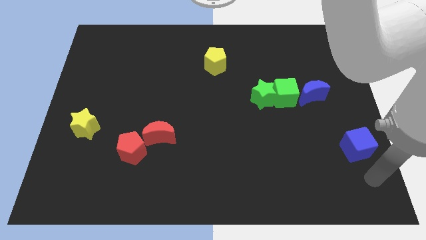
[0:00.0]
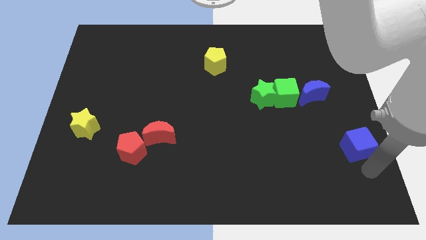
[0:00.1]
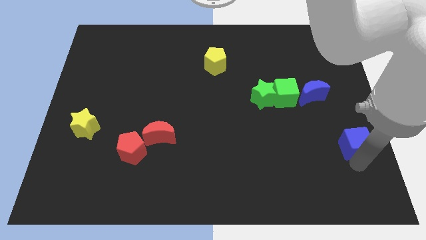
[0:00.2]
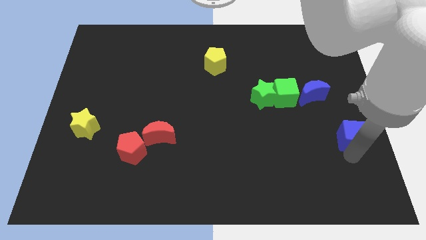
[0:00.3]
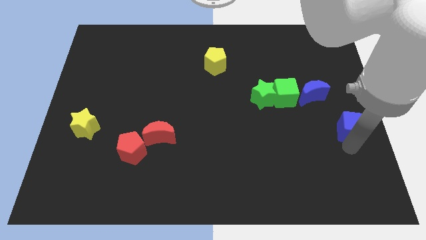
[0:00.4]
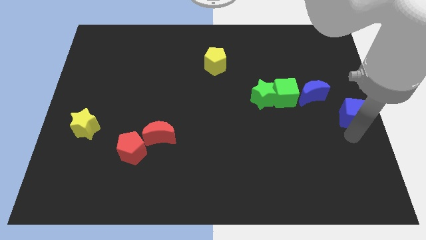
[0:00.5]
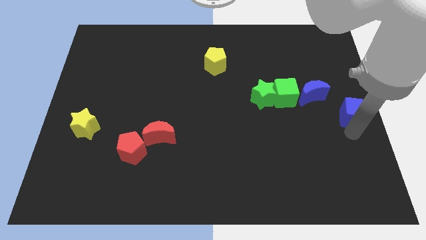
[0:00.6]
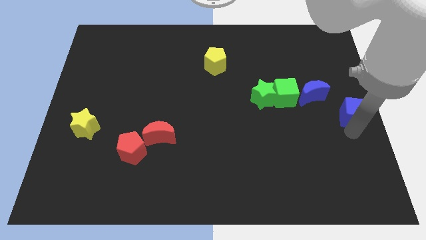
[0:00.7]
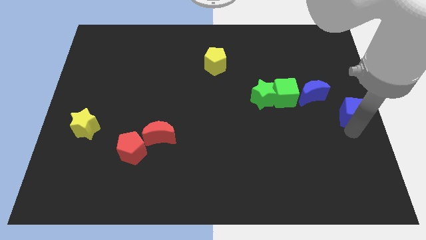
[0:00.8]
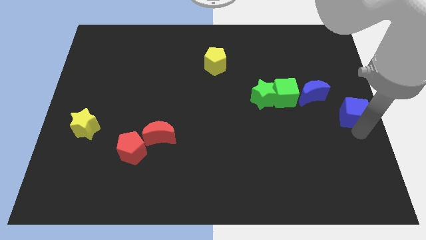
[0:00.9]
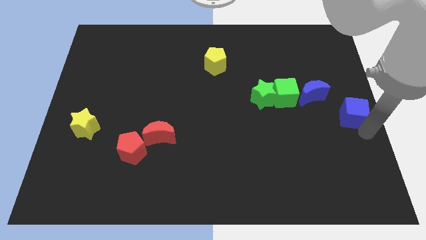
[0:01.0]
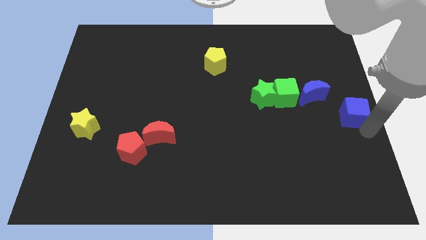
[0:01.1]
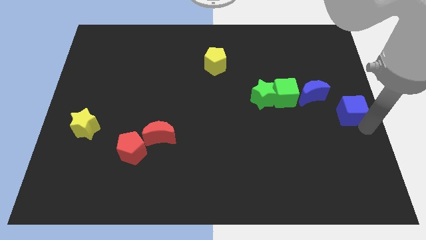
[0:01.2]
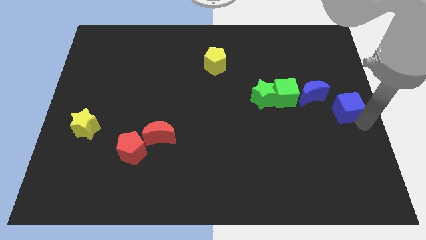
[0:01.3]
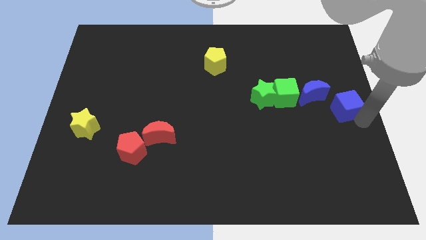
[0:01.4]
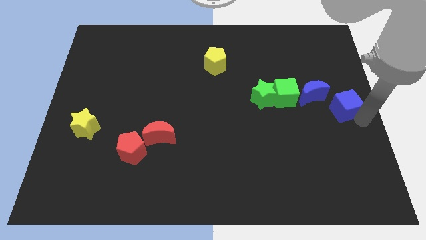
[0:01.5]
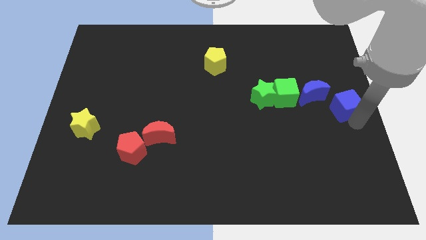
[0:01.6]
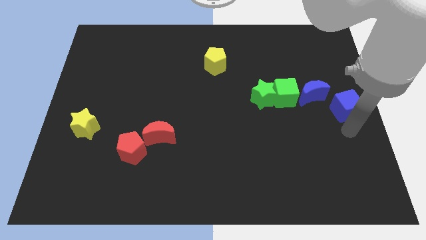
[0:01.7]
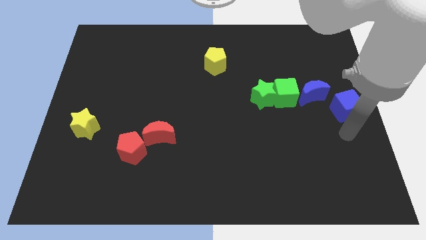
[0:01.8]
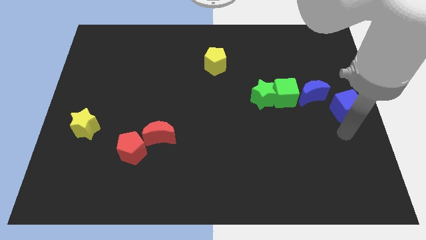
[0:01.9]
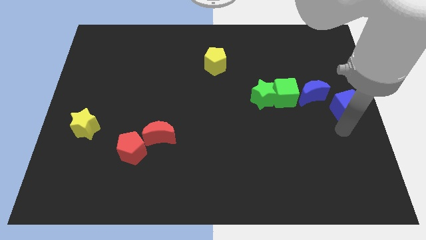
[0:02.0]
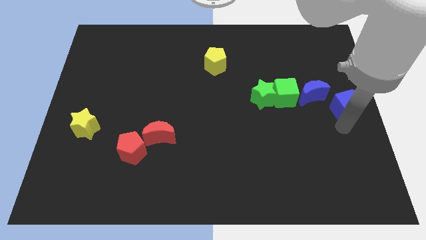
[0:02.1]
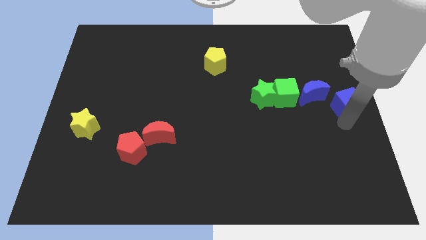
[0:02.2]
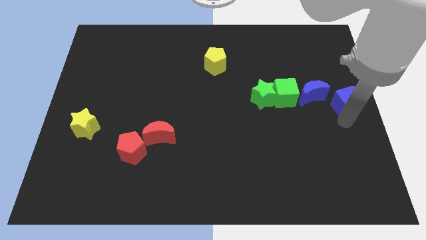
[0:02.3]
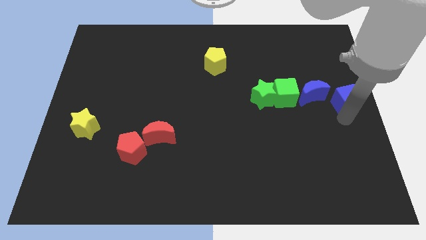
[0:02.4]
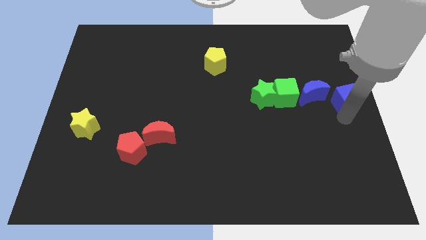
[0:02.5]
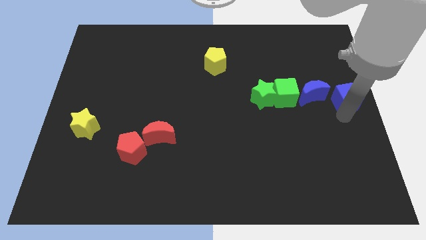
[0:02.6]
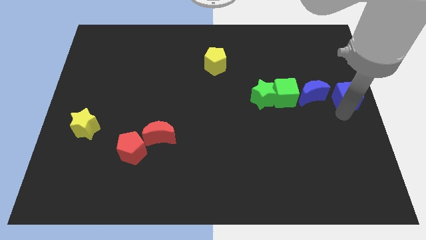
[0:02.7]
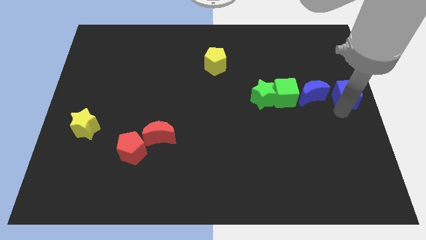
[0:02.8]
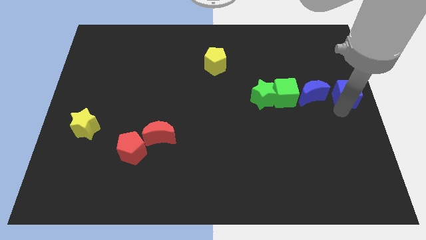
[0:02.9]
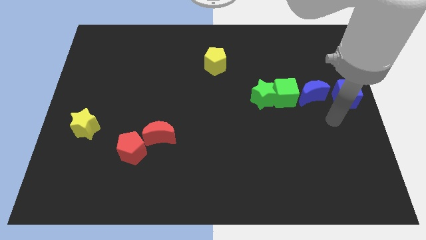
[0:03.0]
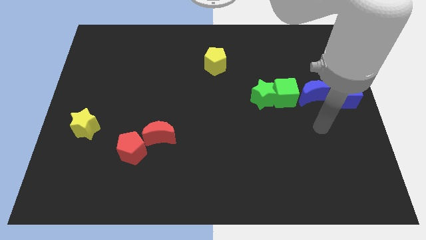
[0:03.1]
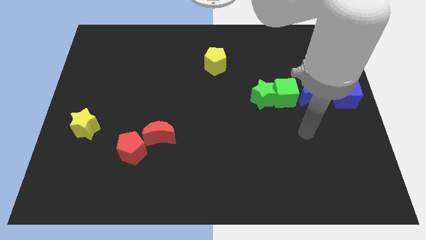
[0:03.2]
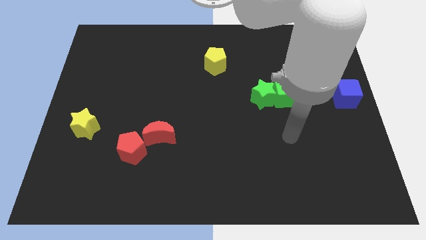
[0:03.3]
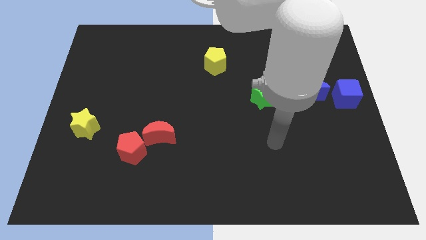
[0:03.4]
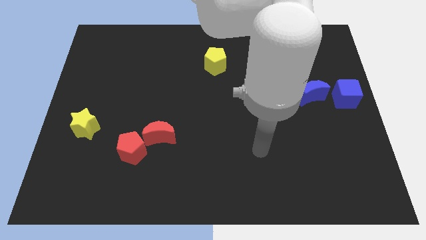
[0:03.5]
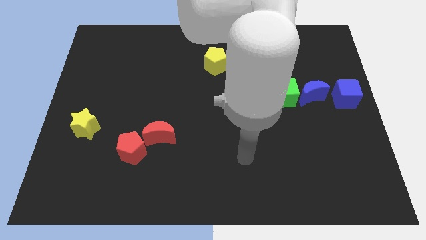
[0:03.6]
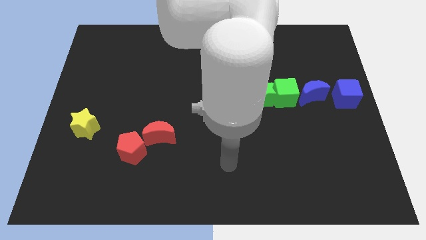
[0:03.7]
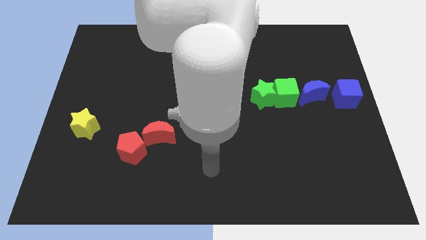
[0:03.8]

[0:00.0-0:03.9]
move the blue cube right the blue moon

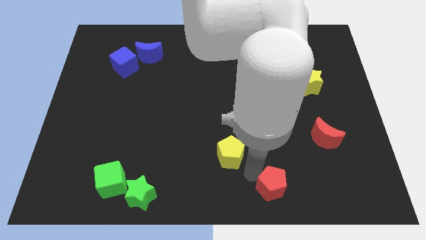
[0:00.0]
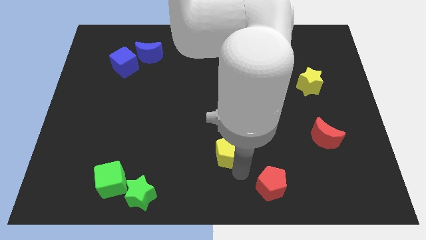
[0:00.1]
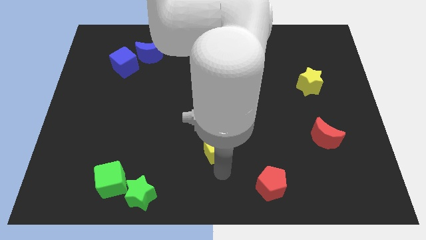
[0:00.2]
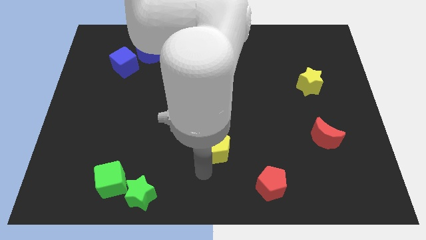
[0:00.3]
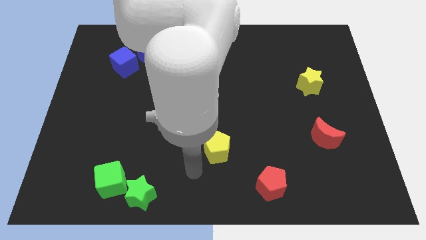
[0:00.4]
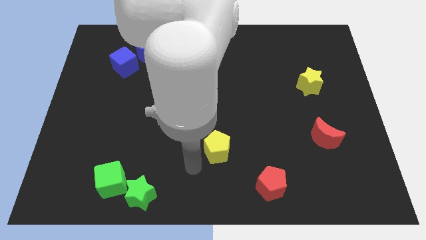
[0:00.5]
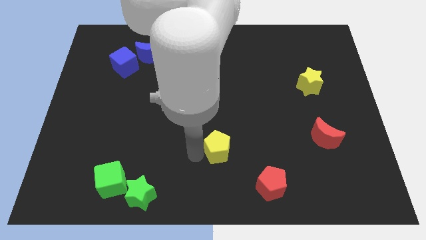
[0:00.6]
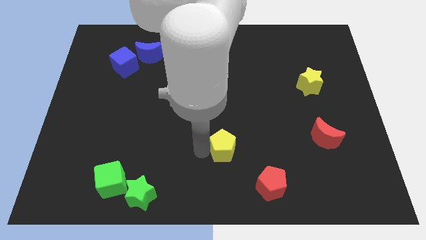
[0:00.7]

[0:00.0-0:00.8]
tap yellow pentagon on left

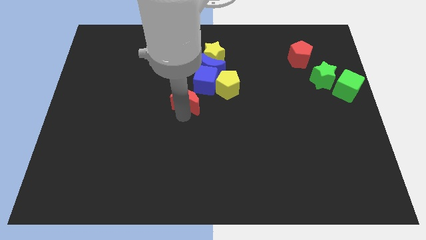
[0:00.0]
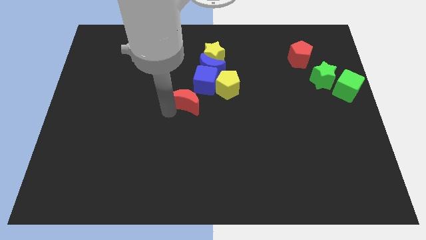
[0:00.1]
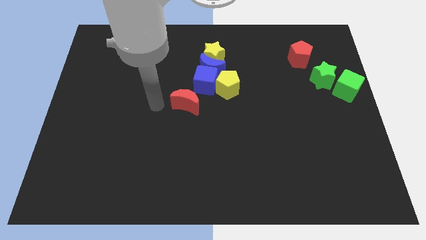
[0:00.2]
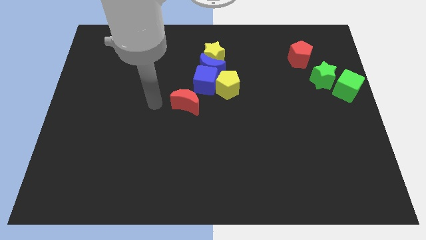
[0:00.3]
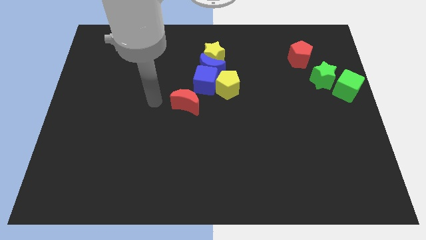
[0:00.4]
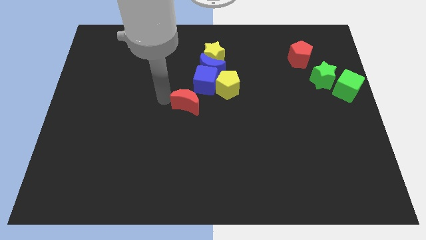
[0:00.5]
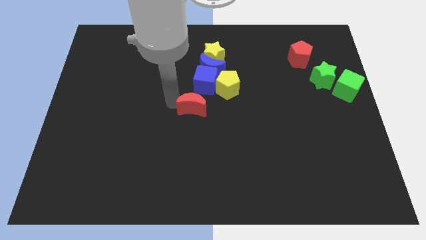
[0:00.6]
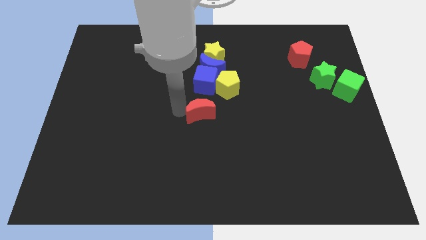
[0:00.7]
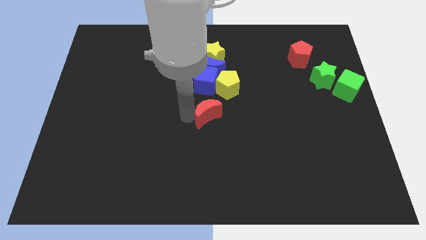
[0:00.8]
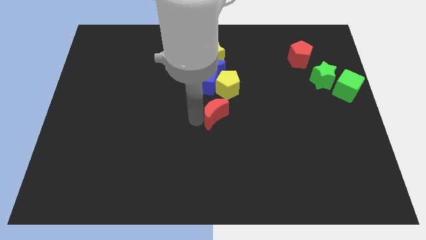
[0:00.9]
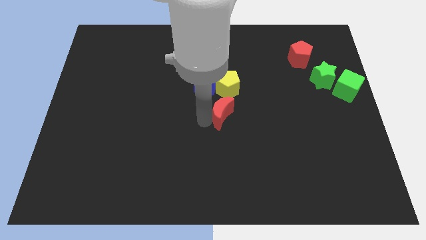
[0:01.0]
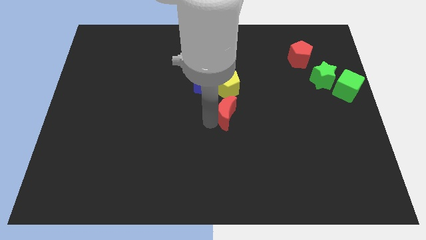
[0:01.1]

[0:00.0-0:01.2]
slide the red moon below the yellow pentagon

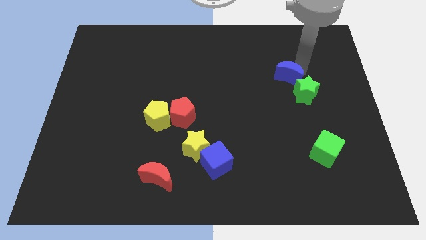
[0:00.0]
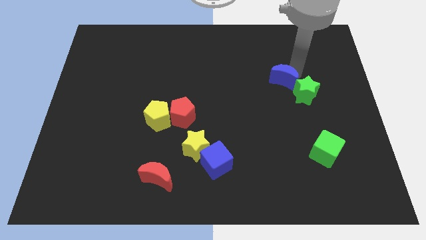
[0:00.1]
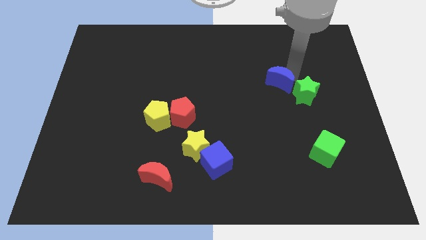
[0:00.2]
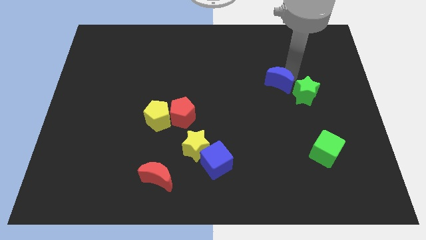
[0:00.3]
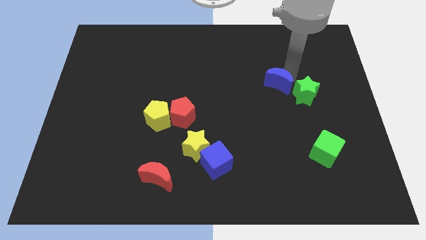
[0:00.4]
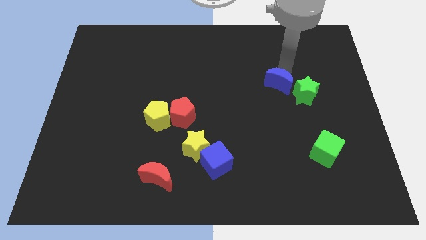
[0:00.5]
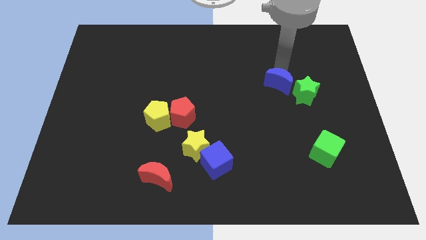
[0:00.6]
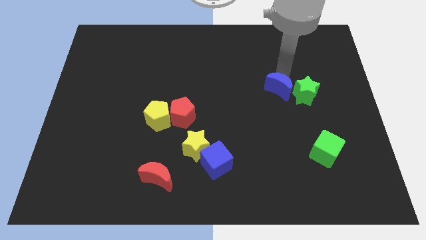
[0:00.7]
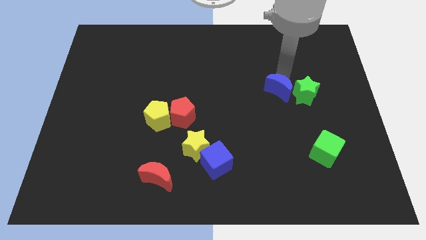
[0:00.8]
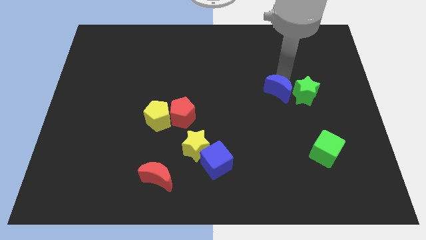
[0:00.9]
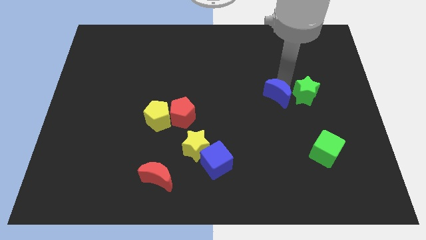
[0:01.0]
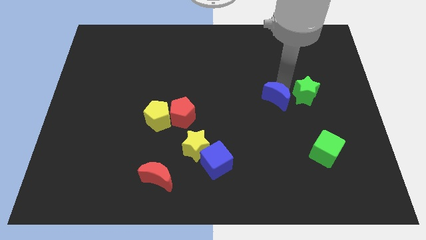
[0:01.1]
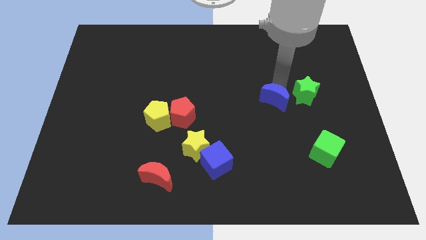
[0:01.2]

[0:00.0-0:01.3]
move the blue crescent to the left of the green star

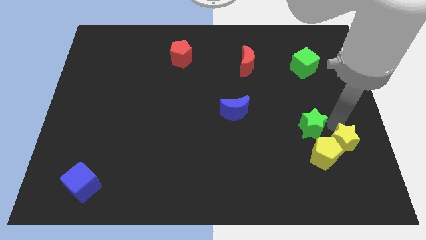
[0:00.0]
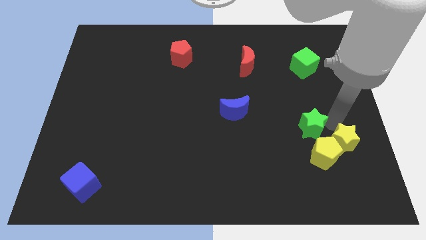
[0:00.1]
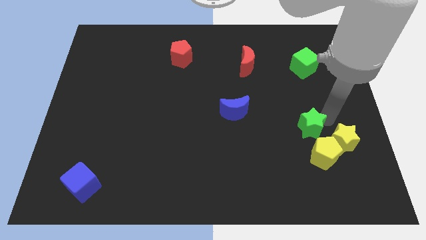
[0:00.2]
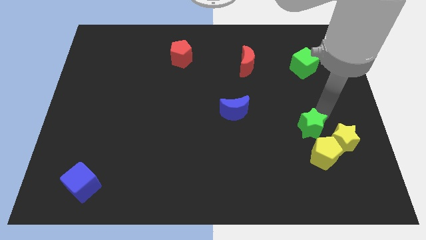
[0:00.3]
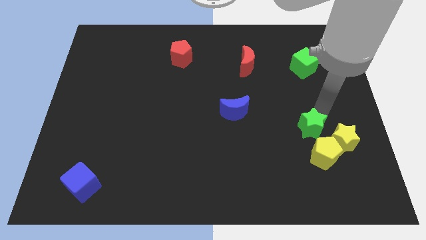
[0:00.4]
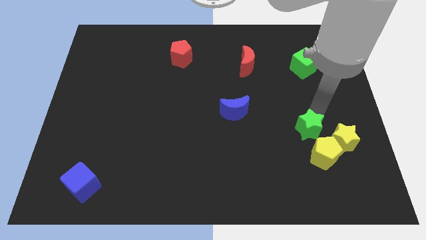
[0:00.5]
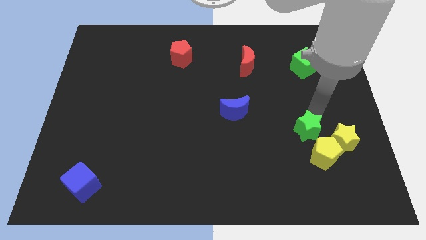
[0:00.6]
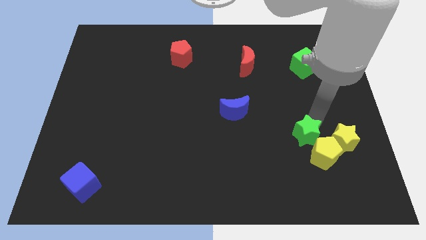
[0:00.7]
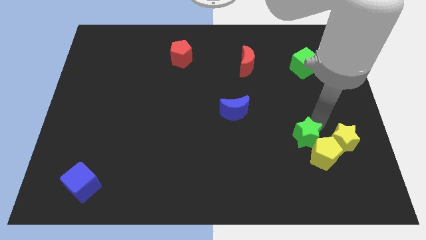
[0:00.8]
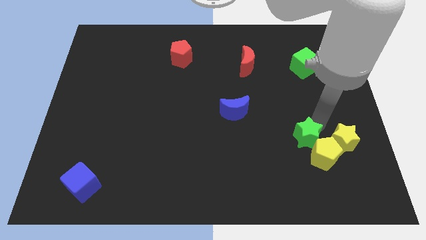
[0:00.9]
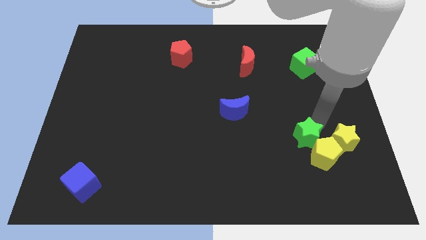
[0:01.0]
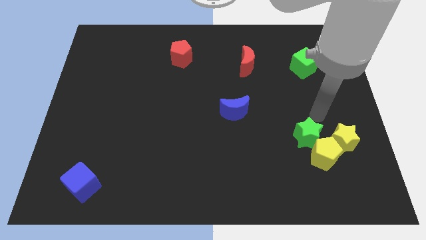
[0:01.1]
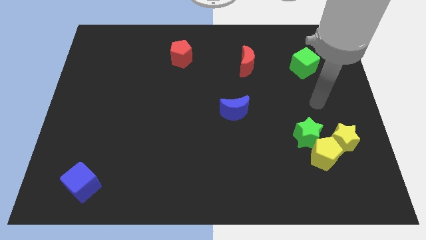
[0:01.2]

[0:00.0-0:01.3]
push the green star into the yellow pentagon

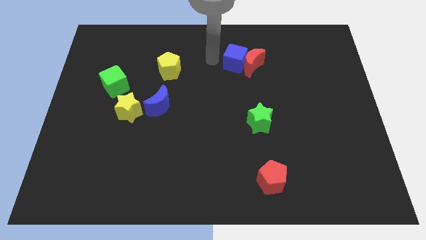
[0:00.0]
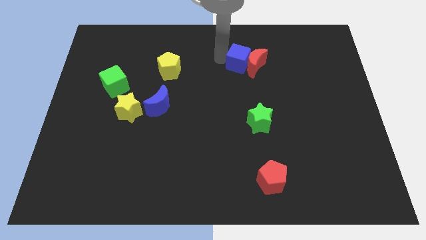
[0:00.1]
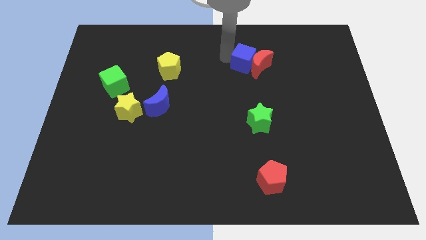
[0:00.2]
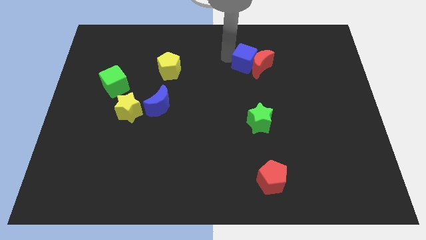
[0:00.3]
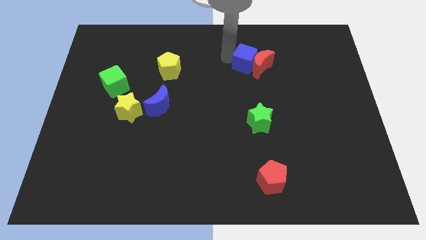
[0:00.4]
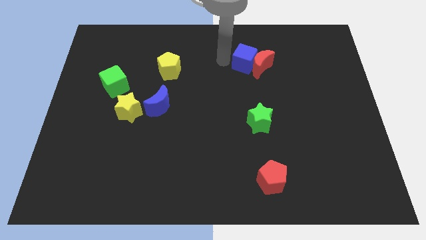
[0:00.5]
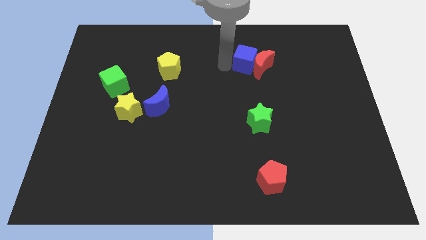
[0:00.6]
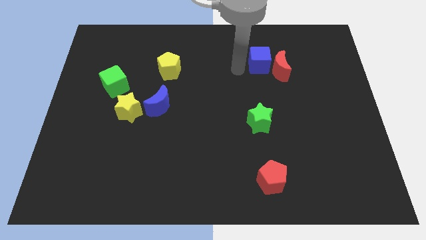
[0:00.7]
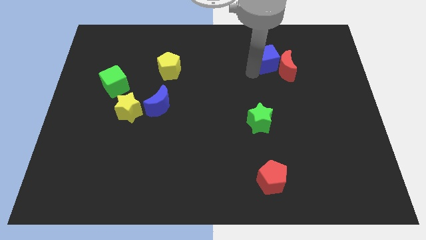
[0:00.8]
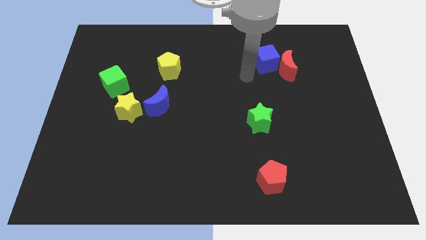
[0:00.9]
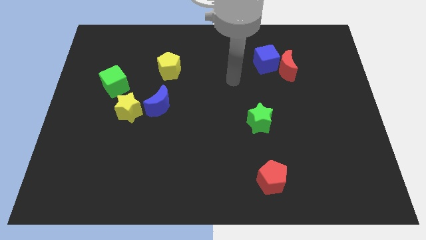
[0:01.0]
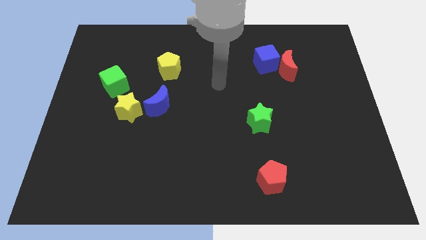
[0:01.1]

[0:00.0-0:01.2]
push the blue cube to the right side of the board
